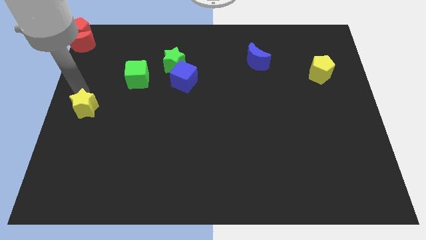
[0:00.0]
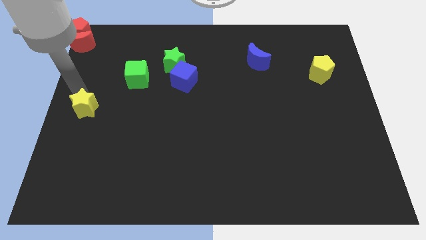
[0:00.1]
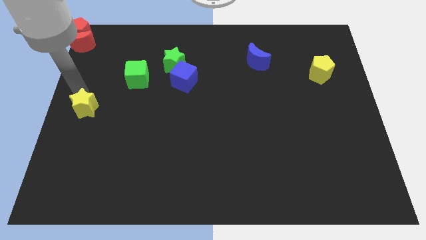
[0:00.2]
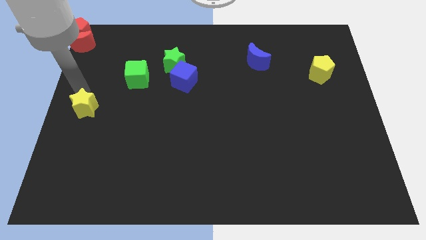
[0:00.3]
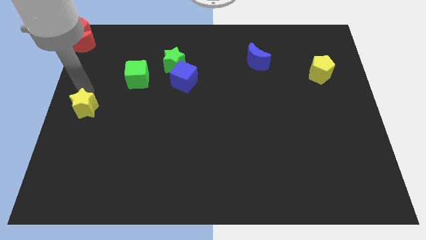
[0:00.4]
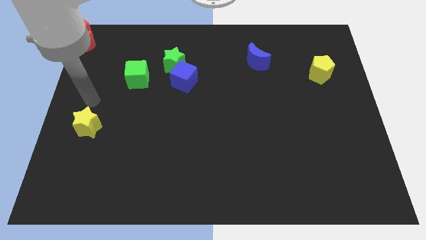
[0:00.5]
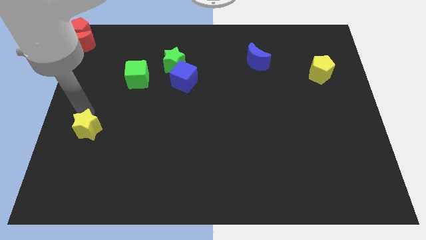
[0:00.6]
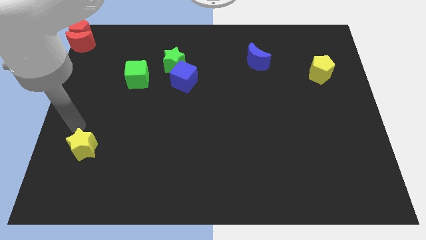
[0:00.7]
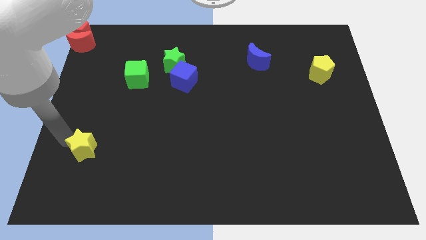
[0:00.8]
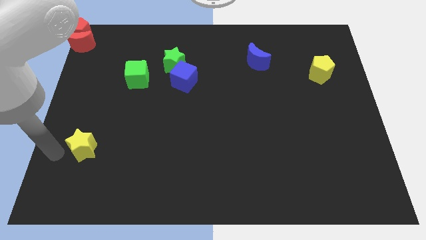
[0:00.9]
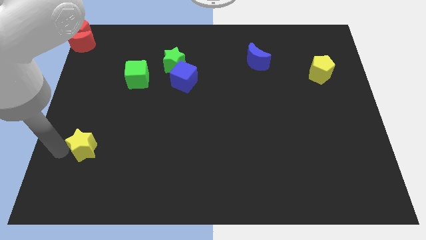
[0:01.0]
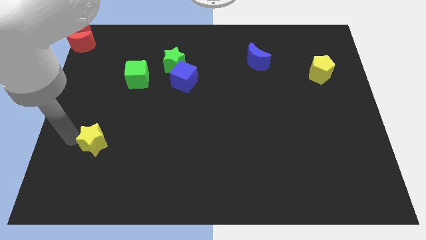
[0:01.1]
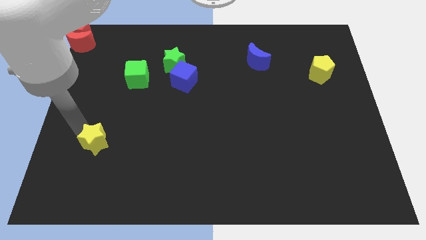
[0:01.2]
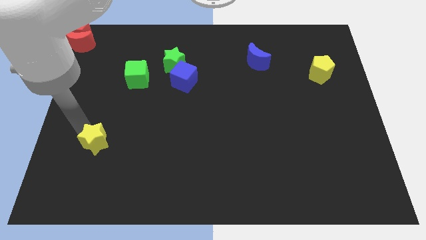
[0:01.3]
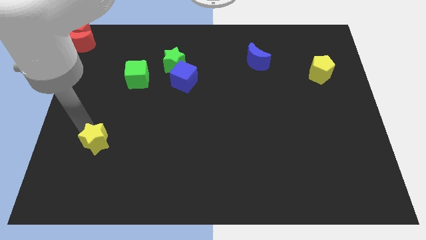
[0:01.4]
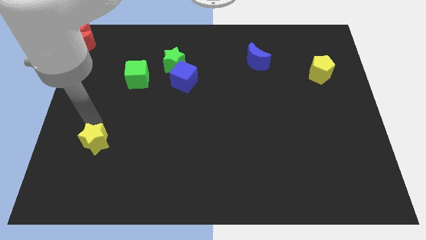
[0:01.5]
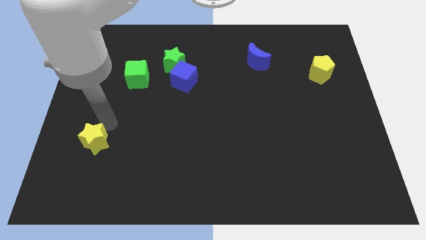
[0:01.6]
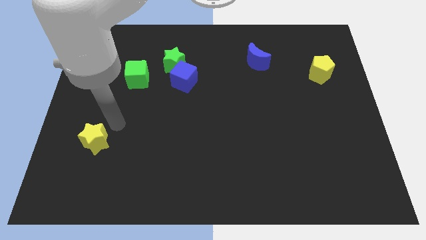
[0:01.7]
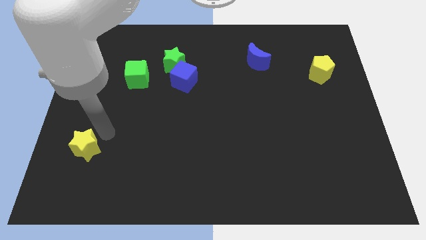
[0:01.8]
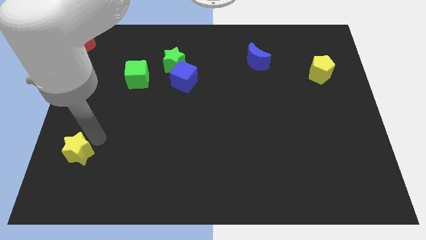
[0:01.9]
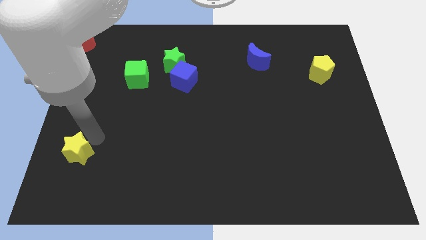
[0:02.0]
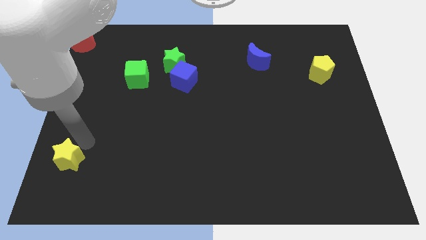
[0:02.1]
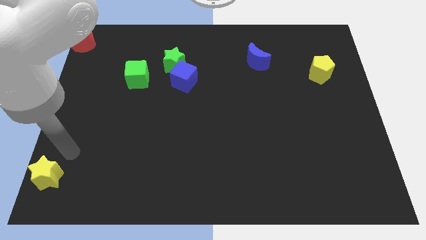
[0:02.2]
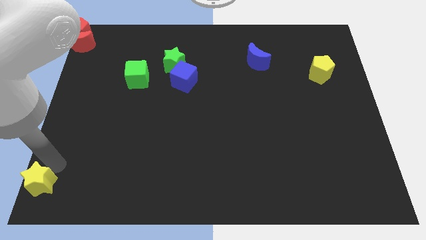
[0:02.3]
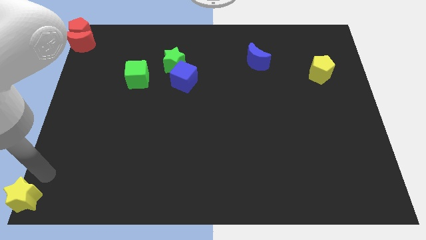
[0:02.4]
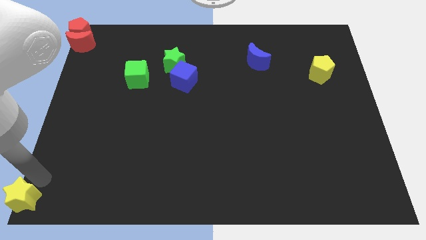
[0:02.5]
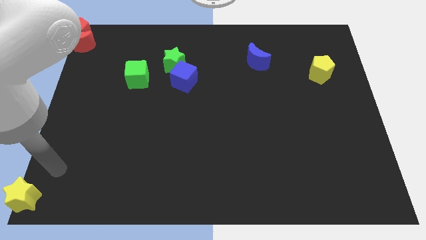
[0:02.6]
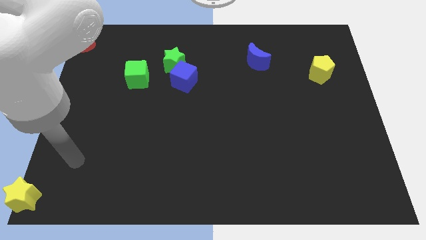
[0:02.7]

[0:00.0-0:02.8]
push the yellow star to the bottom left corner

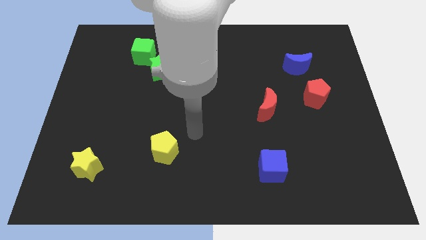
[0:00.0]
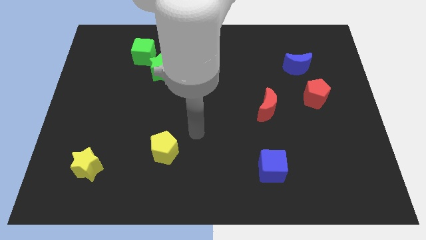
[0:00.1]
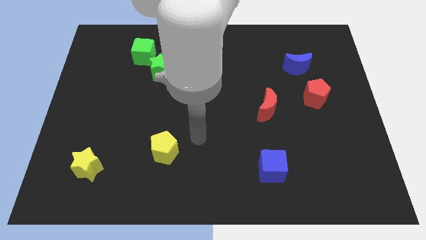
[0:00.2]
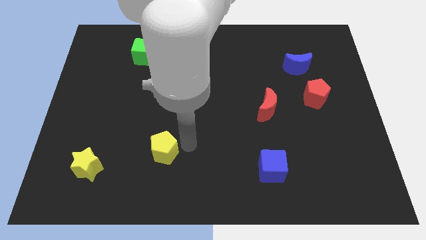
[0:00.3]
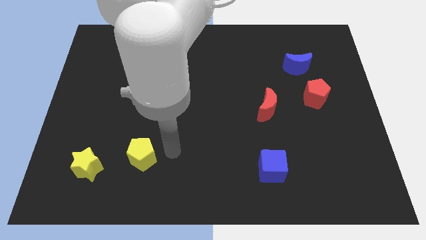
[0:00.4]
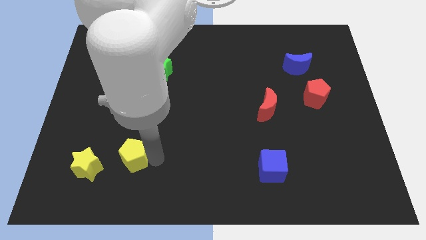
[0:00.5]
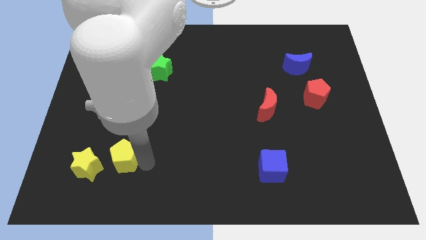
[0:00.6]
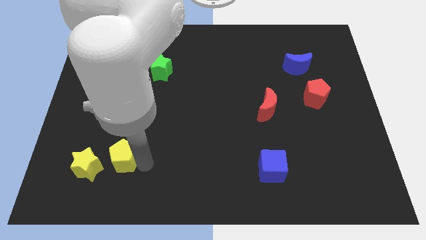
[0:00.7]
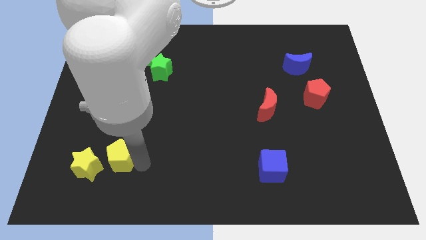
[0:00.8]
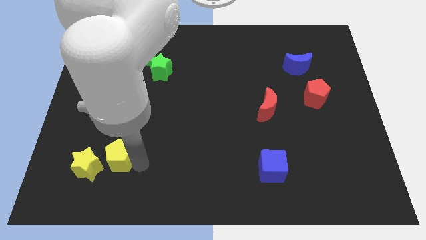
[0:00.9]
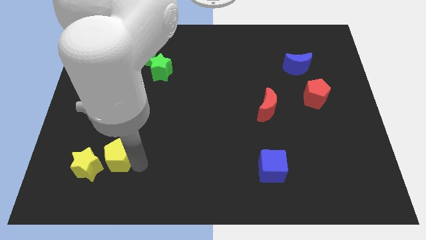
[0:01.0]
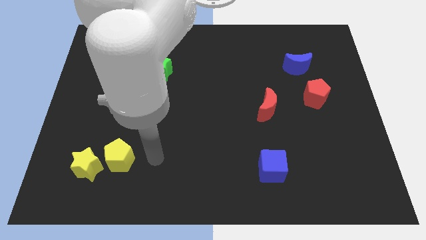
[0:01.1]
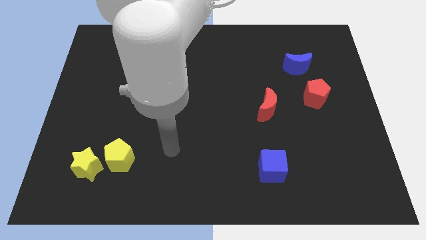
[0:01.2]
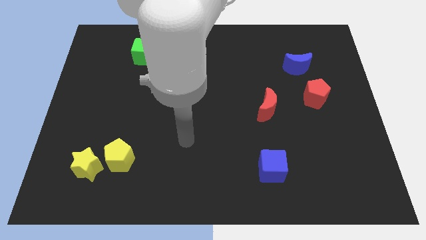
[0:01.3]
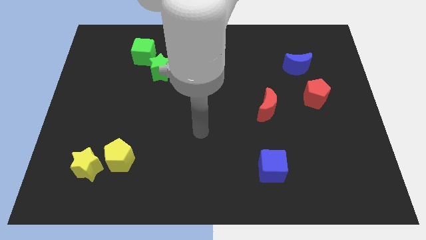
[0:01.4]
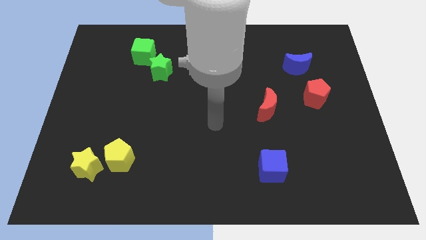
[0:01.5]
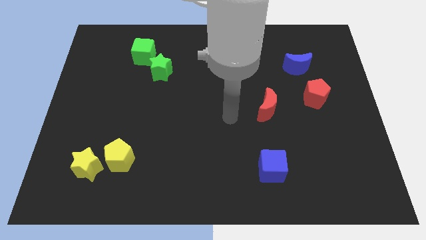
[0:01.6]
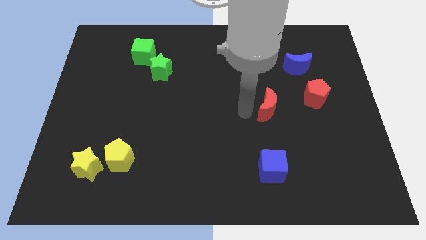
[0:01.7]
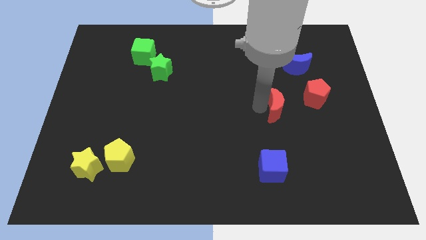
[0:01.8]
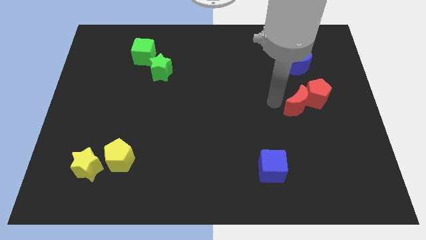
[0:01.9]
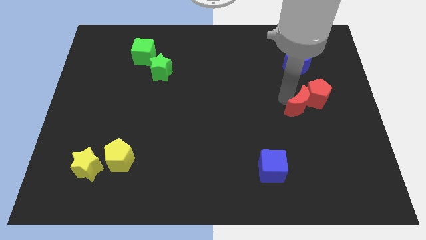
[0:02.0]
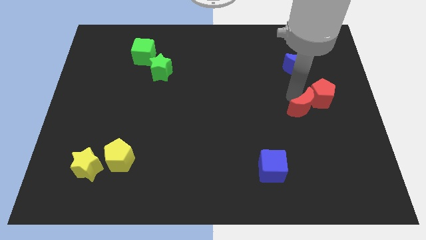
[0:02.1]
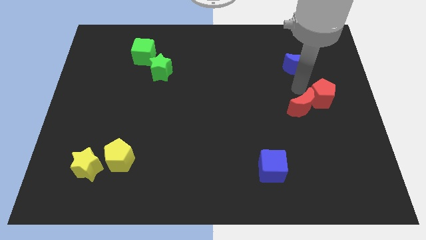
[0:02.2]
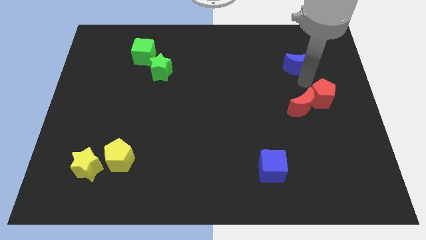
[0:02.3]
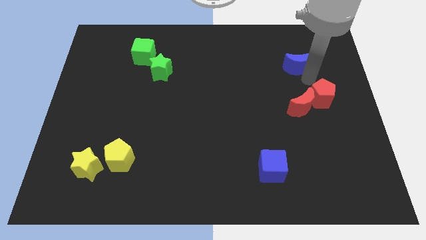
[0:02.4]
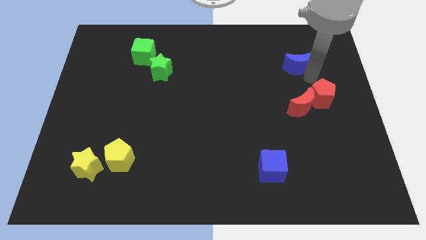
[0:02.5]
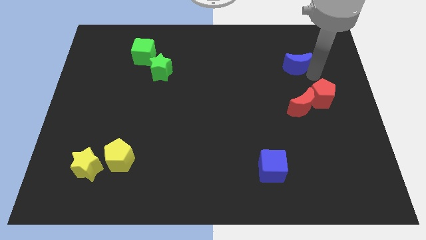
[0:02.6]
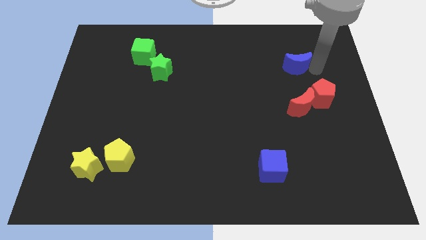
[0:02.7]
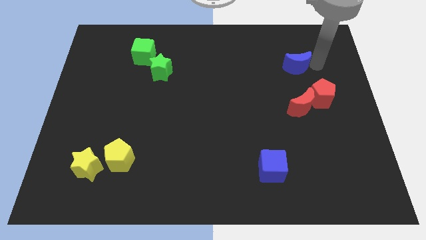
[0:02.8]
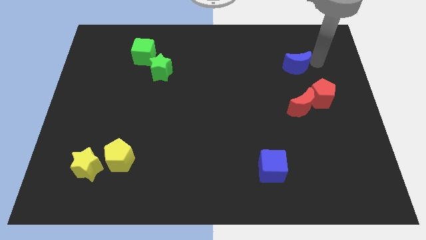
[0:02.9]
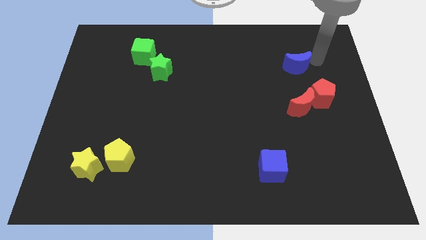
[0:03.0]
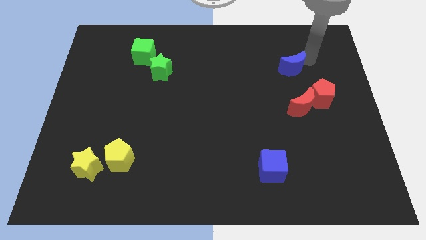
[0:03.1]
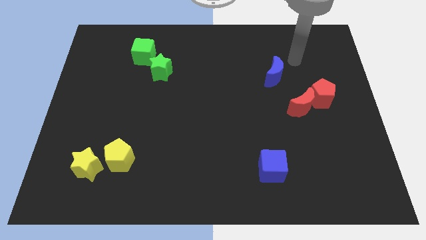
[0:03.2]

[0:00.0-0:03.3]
move red moon and yellow pentagon in opposite direction

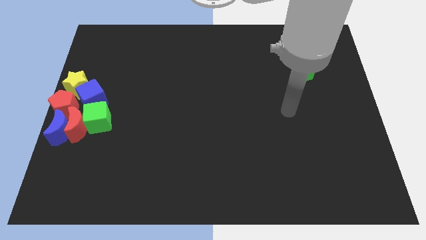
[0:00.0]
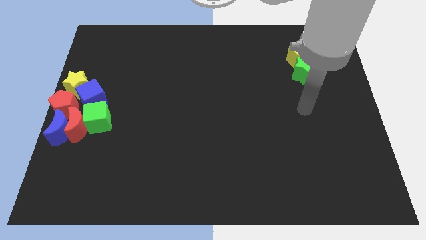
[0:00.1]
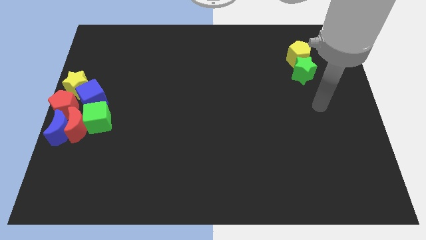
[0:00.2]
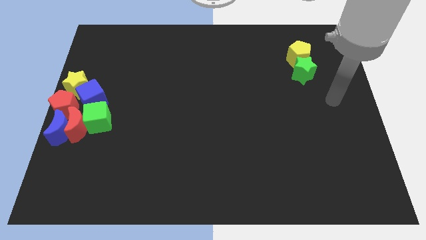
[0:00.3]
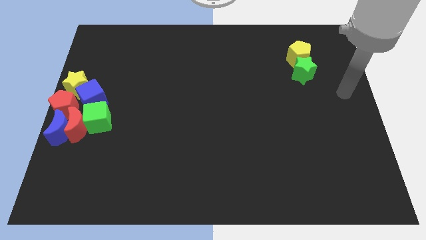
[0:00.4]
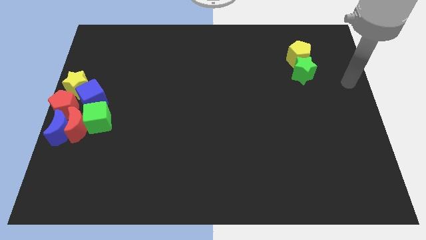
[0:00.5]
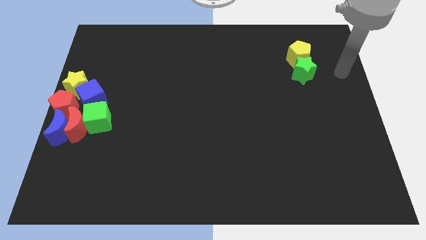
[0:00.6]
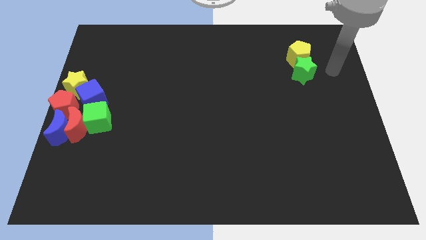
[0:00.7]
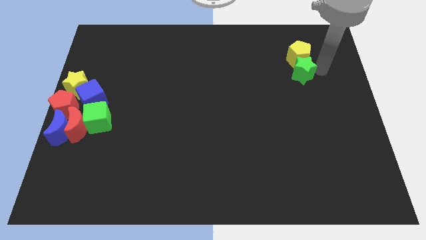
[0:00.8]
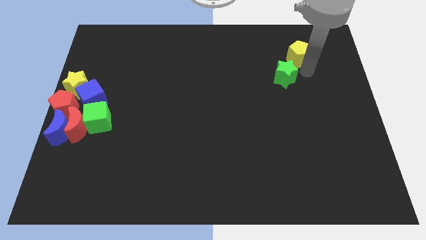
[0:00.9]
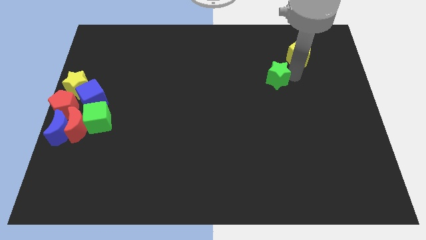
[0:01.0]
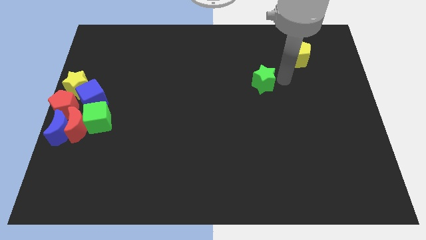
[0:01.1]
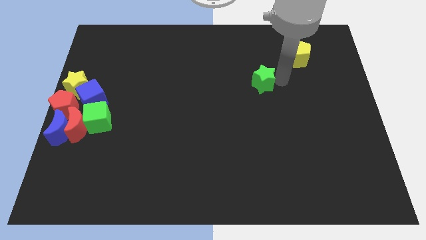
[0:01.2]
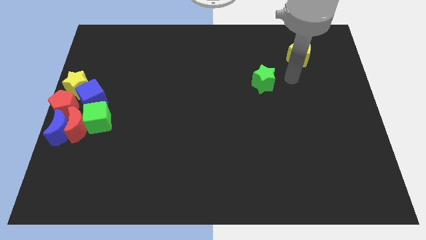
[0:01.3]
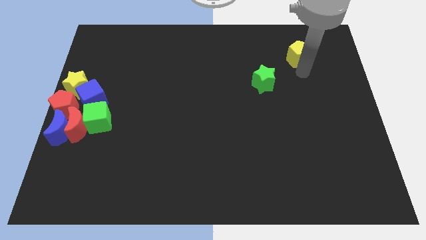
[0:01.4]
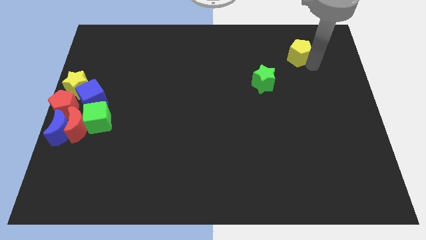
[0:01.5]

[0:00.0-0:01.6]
separate the green star away from the yellow pentagon

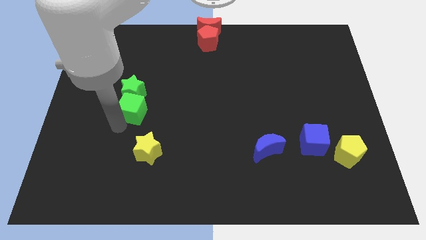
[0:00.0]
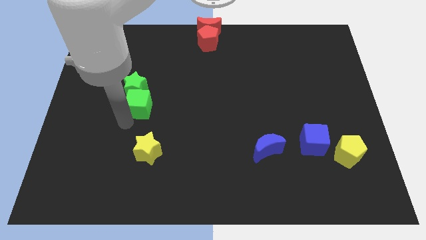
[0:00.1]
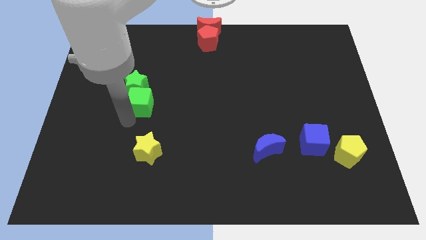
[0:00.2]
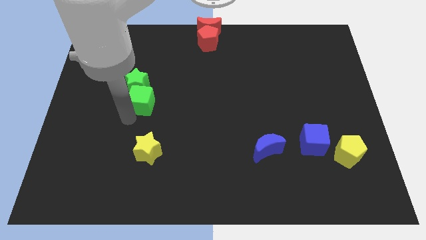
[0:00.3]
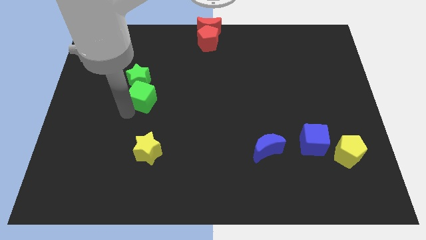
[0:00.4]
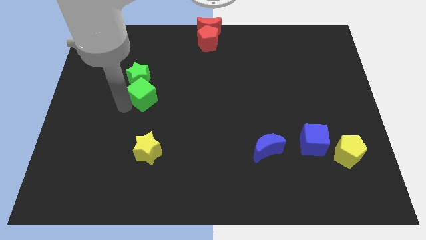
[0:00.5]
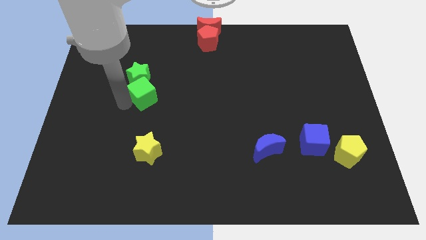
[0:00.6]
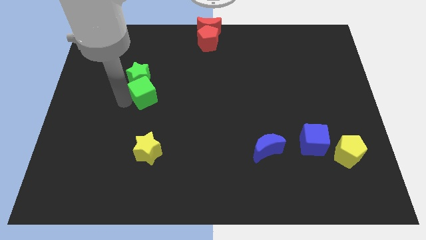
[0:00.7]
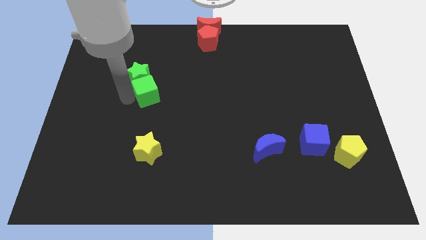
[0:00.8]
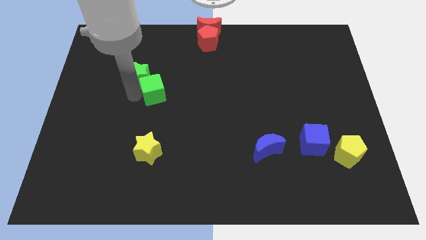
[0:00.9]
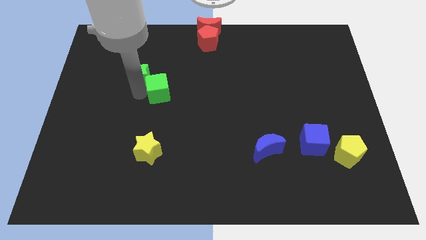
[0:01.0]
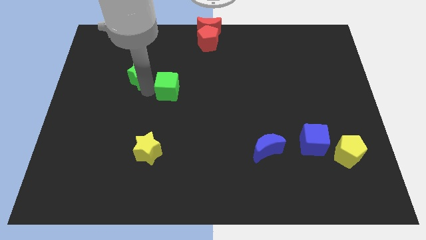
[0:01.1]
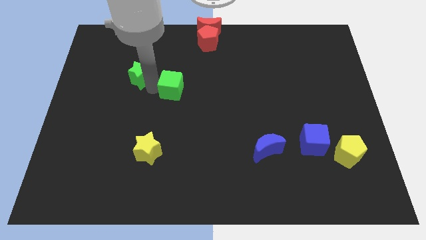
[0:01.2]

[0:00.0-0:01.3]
separate green blocks from yellow star
